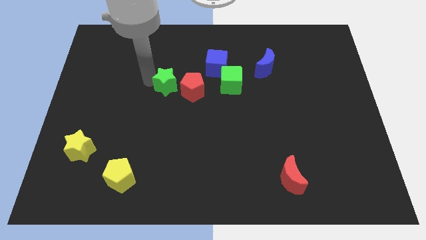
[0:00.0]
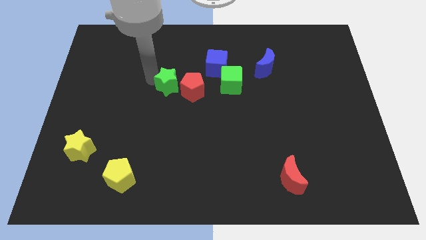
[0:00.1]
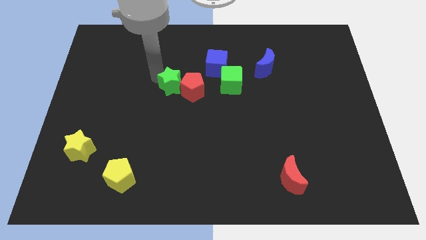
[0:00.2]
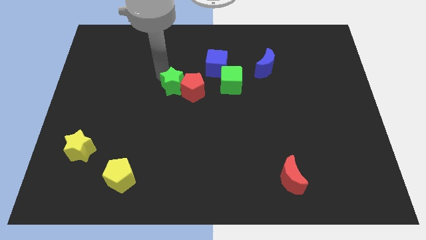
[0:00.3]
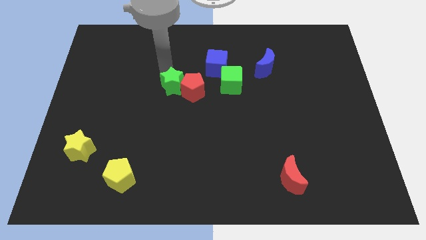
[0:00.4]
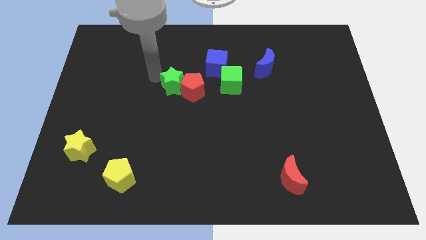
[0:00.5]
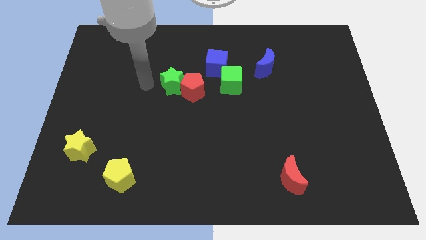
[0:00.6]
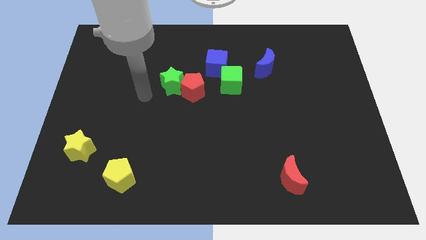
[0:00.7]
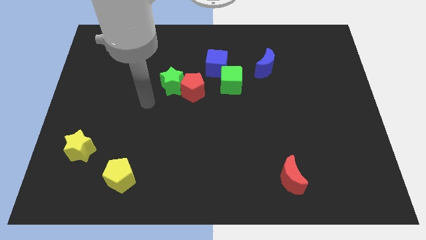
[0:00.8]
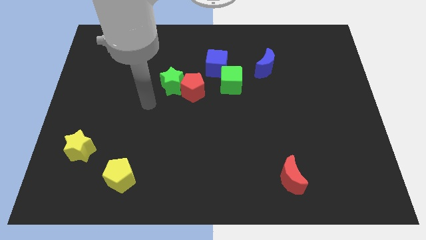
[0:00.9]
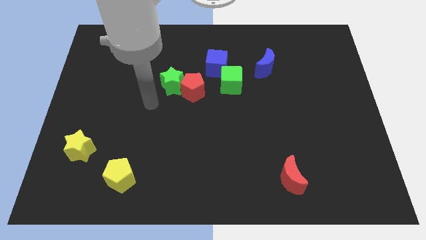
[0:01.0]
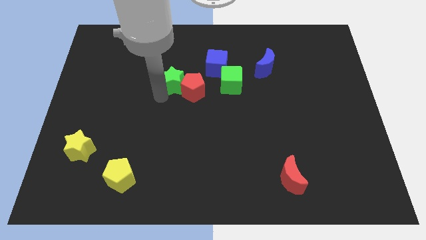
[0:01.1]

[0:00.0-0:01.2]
push the green star in the red pentagon

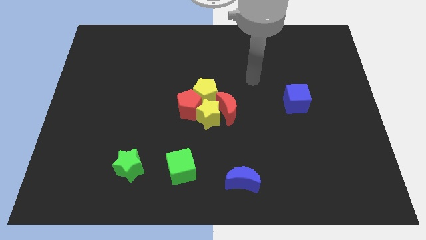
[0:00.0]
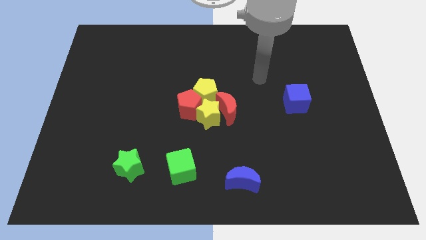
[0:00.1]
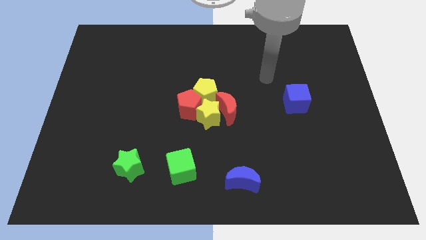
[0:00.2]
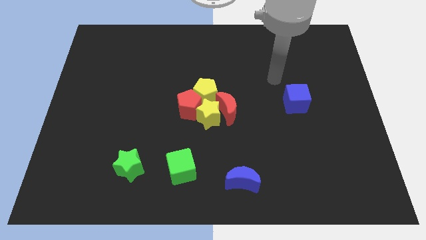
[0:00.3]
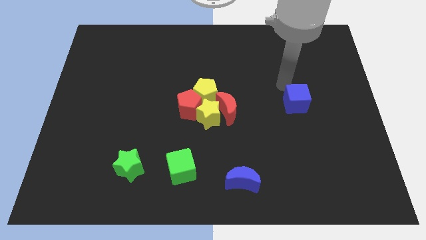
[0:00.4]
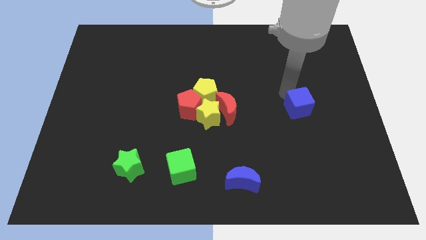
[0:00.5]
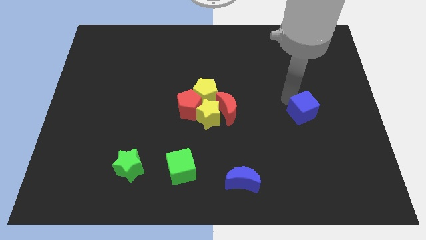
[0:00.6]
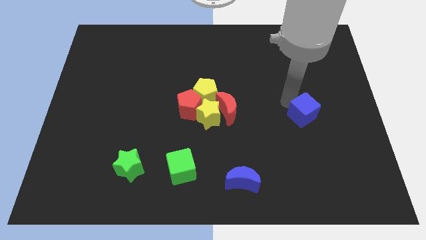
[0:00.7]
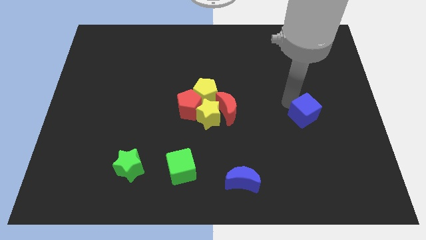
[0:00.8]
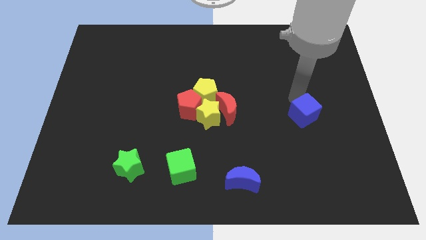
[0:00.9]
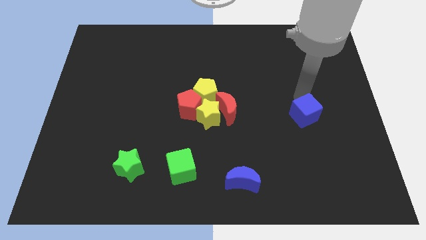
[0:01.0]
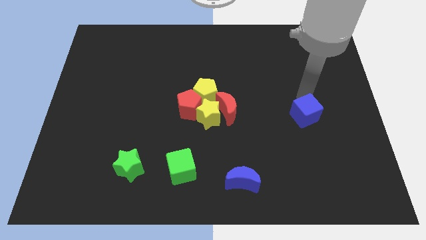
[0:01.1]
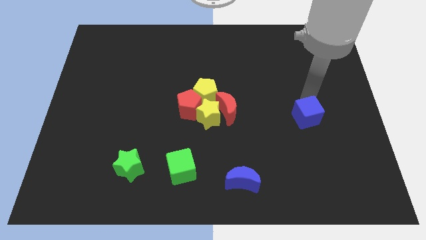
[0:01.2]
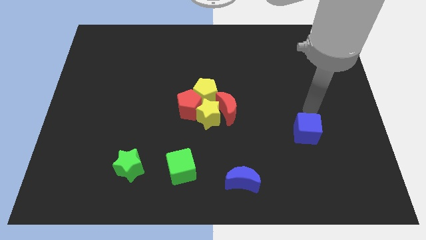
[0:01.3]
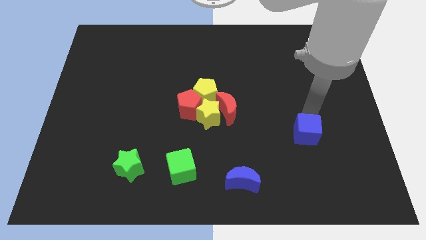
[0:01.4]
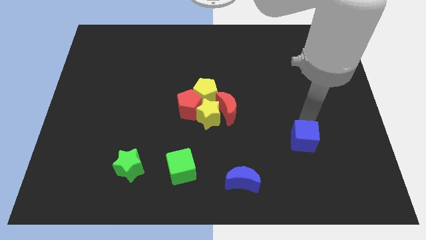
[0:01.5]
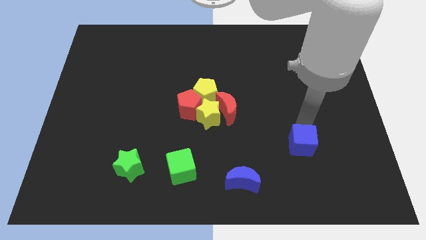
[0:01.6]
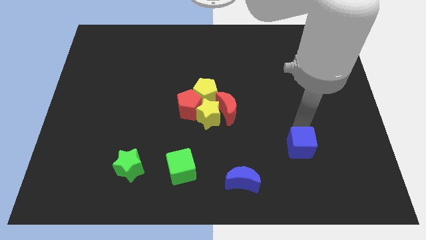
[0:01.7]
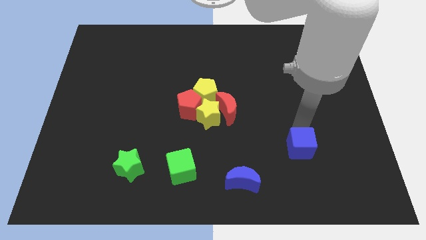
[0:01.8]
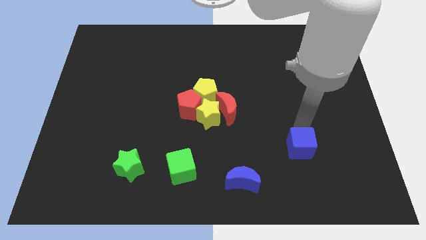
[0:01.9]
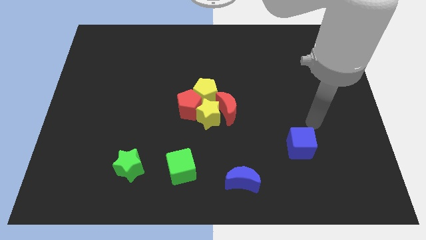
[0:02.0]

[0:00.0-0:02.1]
move blue moon slightly down

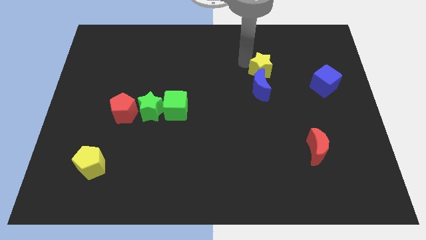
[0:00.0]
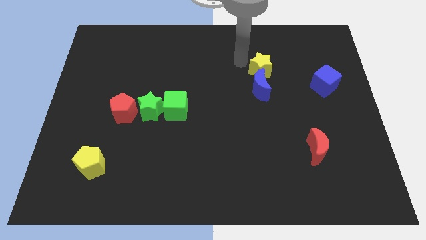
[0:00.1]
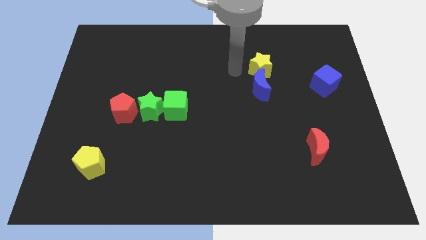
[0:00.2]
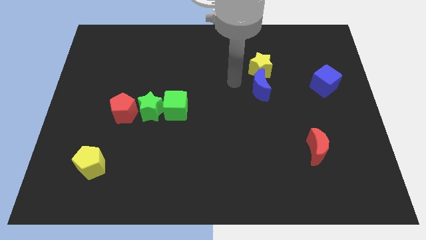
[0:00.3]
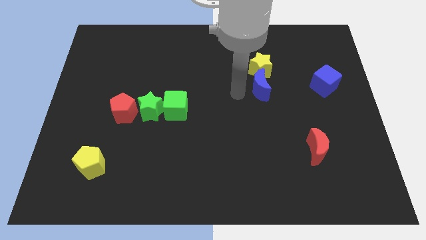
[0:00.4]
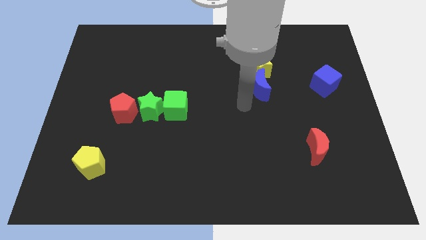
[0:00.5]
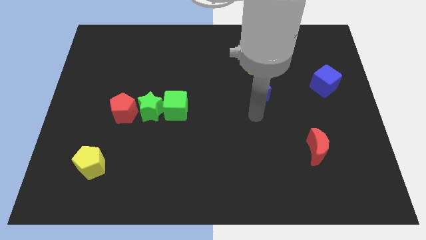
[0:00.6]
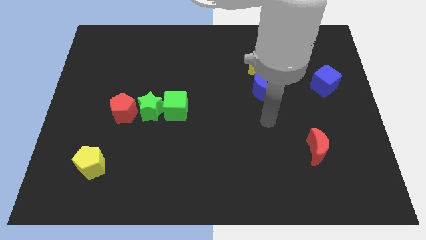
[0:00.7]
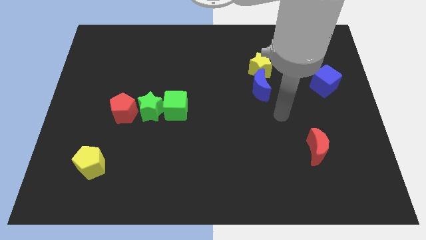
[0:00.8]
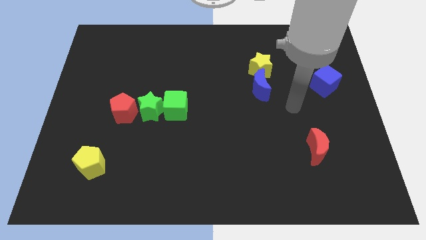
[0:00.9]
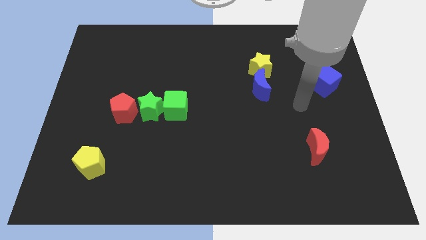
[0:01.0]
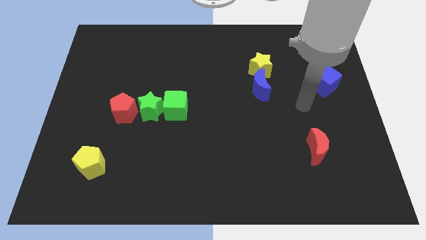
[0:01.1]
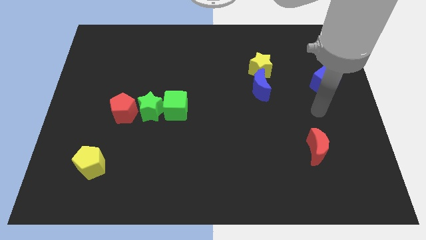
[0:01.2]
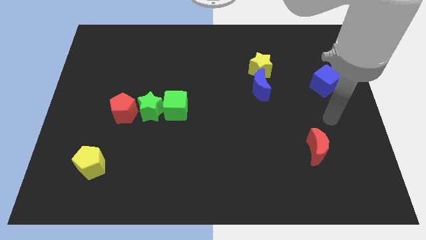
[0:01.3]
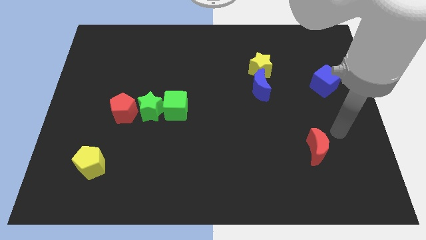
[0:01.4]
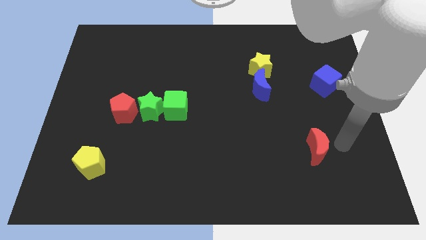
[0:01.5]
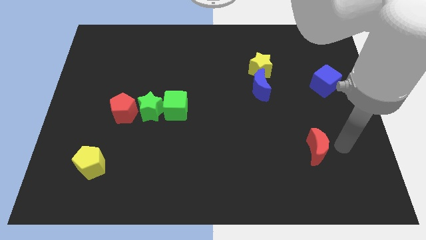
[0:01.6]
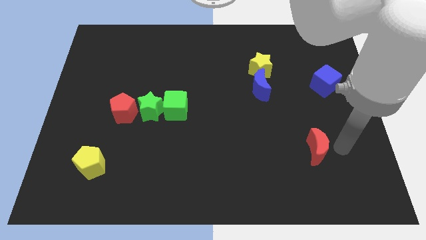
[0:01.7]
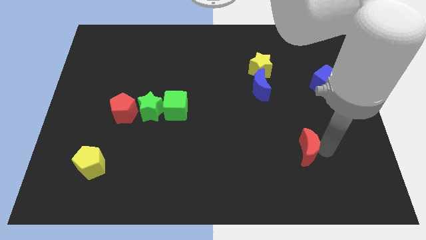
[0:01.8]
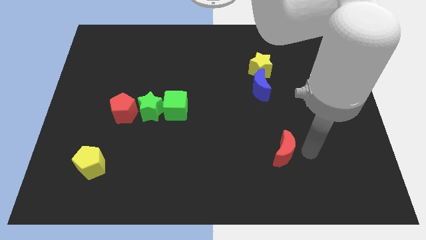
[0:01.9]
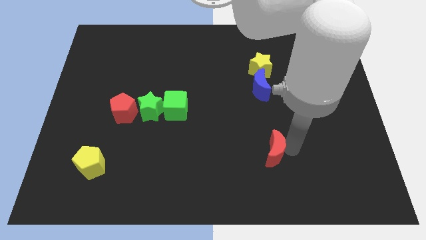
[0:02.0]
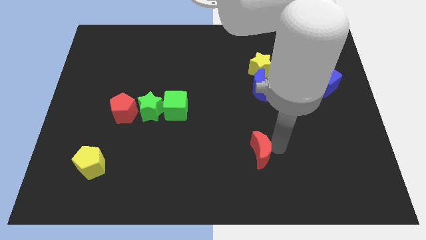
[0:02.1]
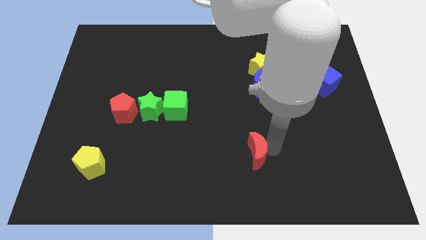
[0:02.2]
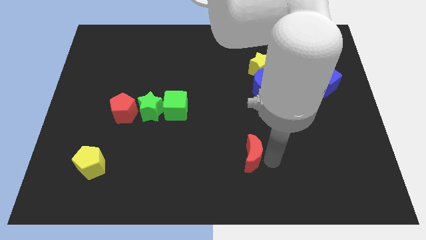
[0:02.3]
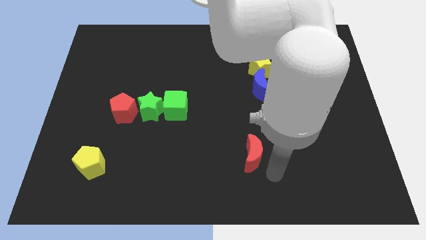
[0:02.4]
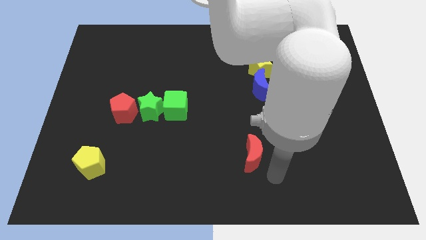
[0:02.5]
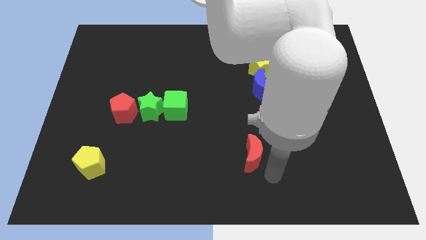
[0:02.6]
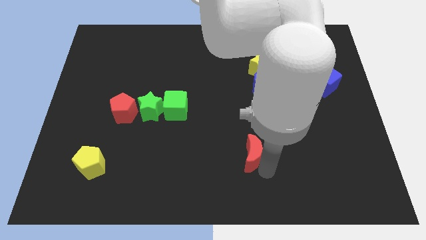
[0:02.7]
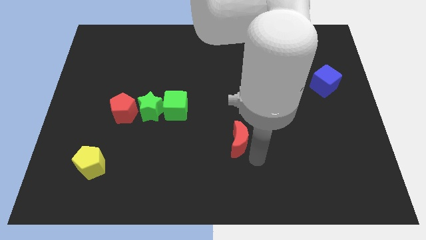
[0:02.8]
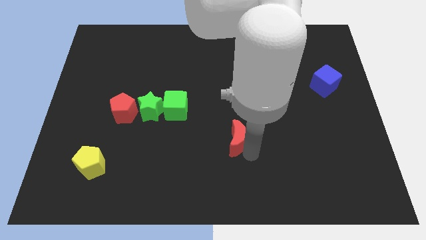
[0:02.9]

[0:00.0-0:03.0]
move red moon towards center

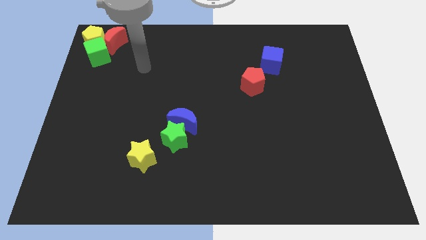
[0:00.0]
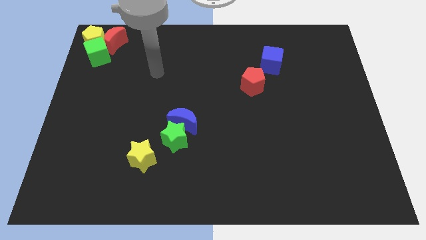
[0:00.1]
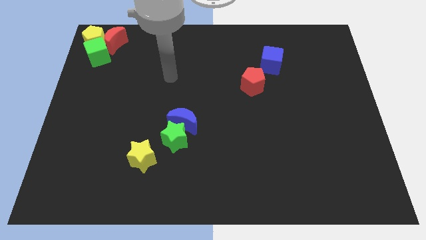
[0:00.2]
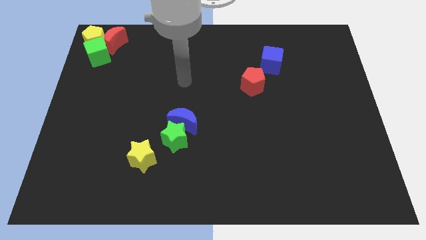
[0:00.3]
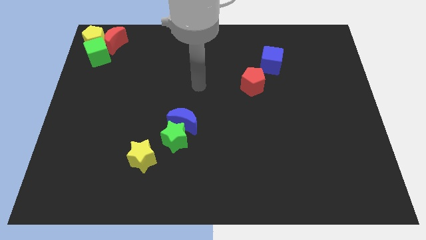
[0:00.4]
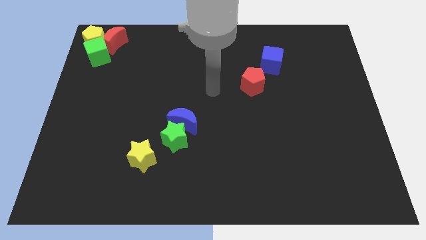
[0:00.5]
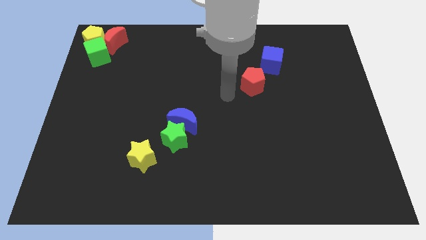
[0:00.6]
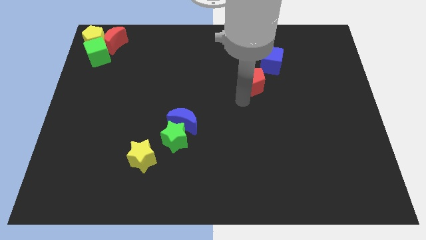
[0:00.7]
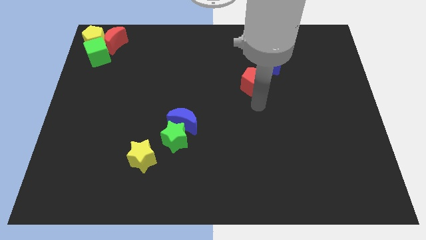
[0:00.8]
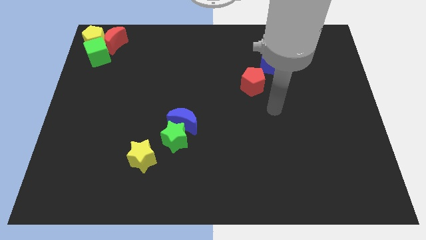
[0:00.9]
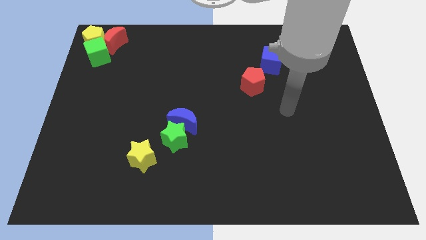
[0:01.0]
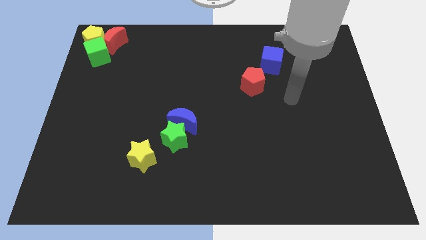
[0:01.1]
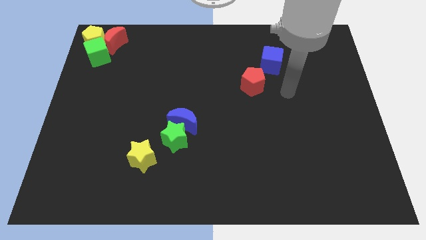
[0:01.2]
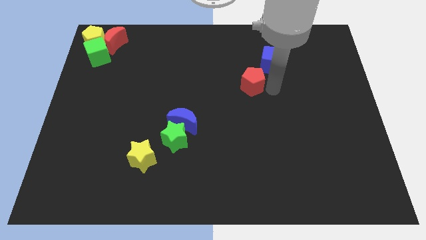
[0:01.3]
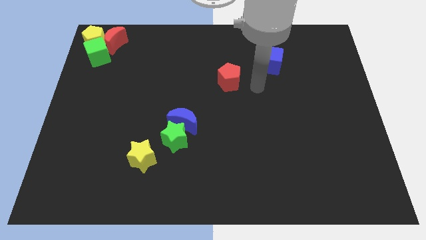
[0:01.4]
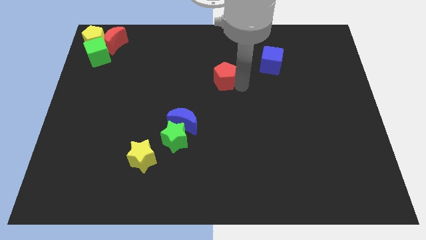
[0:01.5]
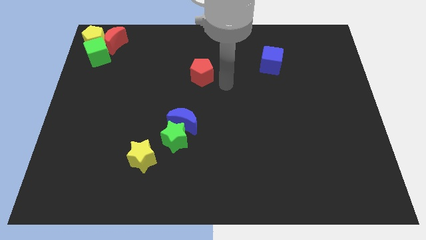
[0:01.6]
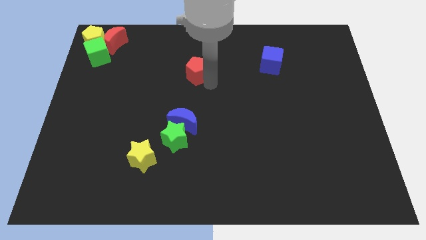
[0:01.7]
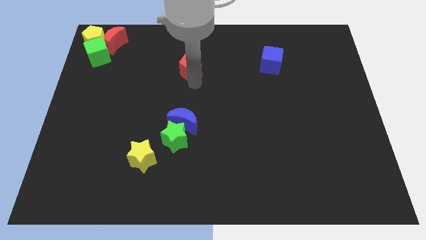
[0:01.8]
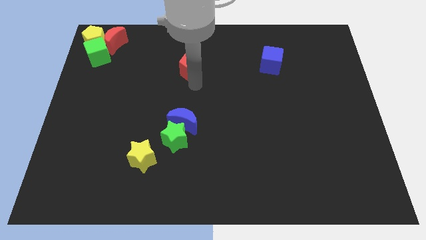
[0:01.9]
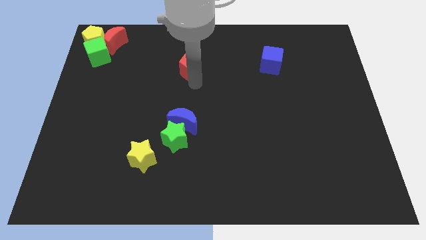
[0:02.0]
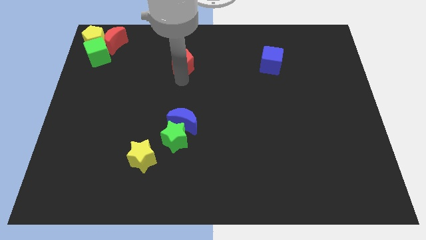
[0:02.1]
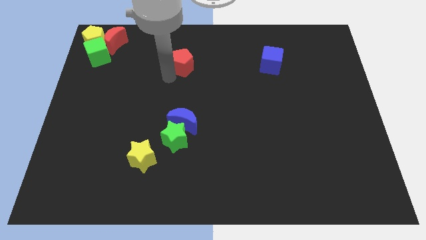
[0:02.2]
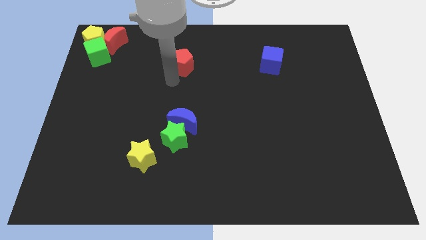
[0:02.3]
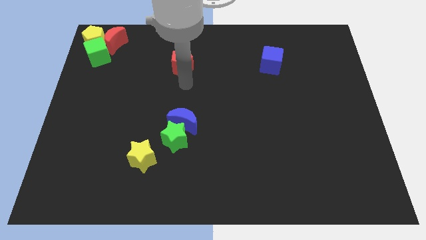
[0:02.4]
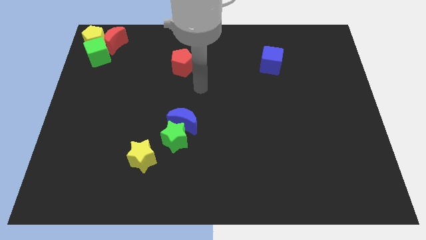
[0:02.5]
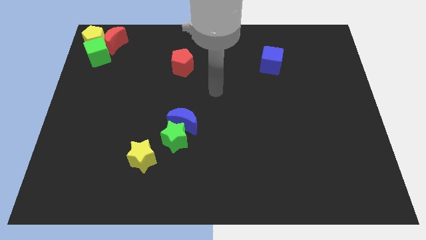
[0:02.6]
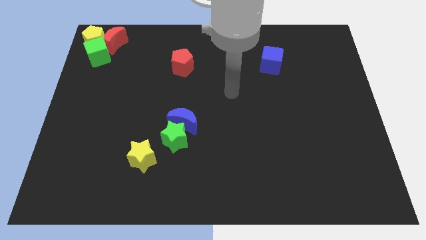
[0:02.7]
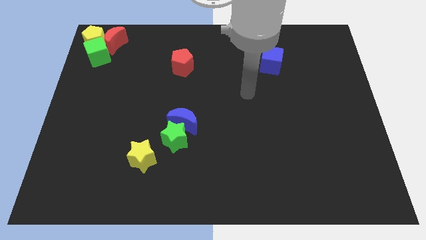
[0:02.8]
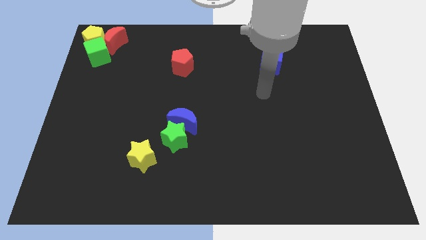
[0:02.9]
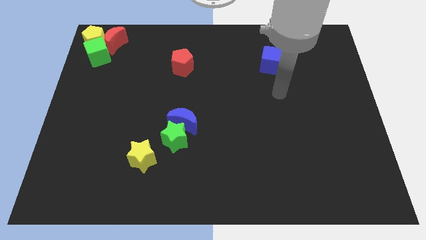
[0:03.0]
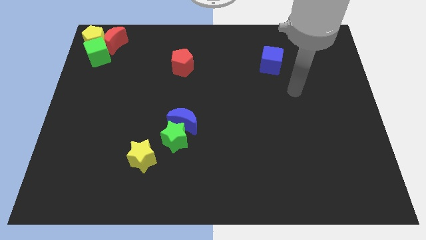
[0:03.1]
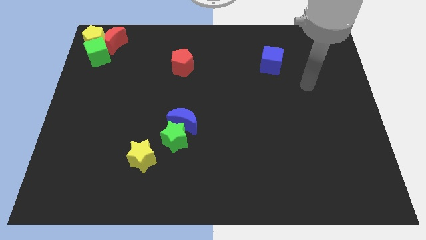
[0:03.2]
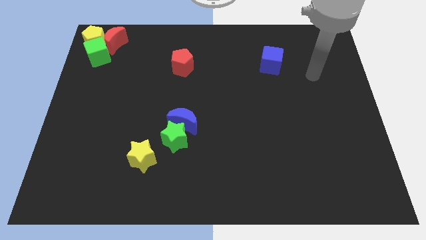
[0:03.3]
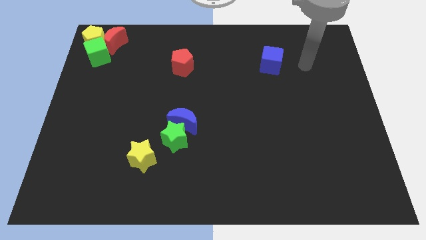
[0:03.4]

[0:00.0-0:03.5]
push the red pentagon to the top left of the board
